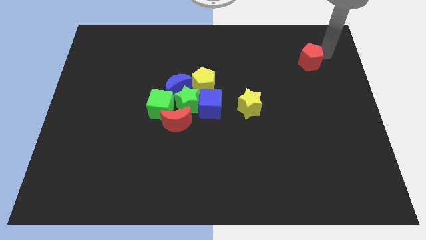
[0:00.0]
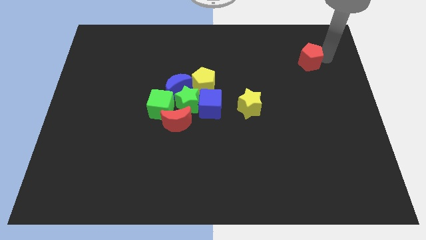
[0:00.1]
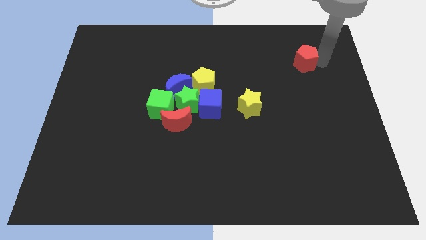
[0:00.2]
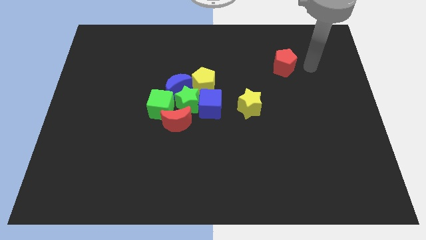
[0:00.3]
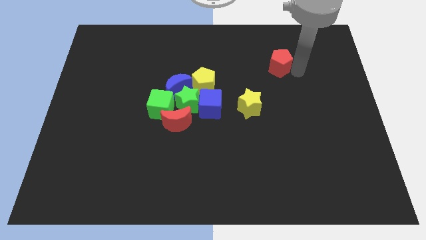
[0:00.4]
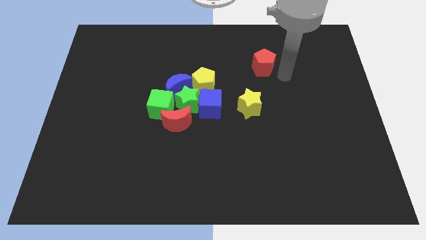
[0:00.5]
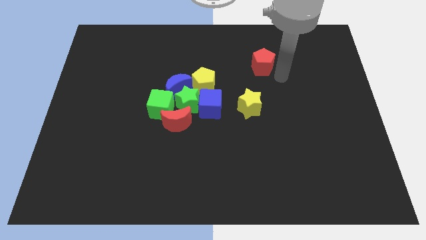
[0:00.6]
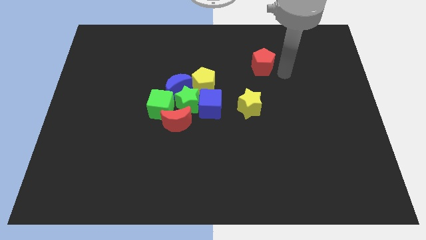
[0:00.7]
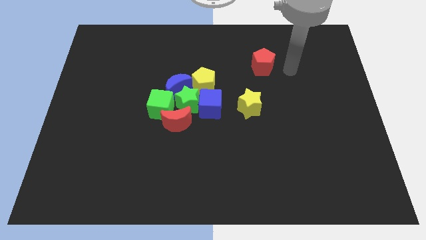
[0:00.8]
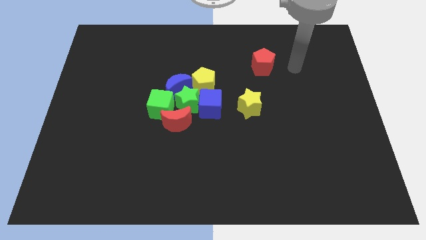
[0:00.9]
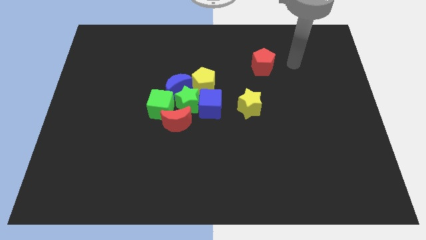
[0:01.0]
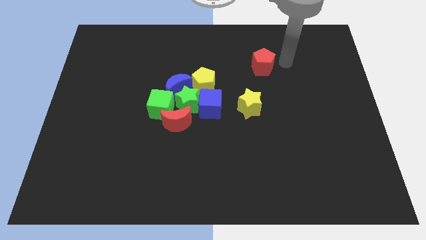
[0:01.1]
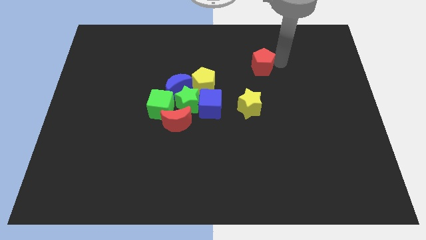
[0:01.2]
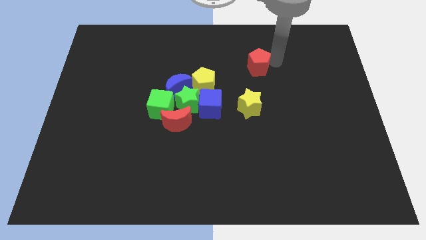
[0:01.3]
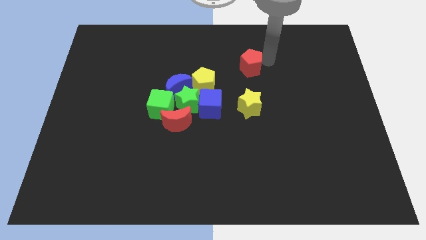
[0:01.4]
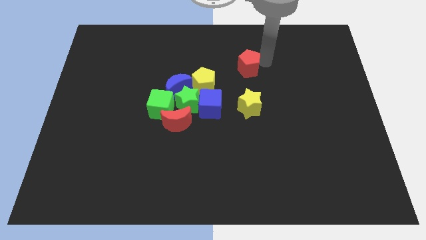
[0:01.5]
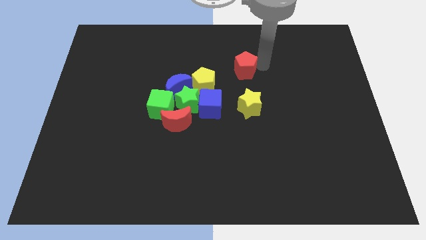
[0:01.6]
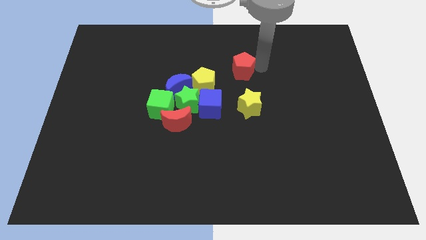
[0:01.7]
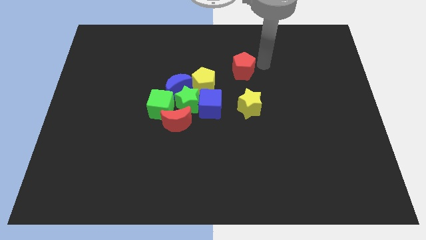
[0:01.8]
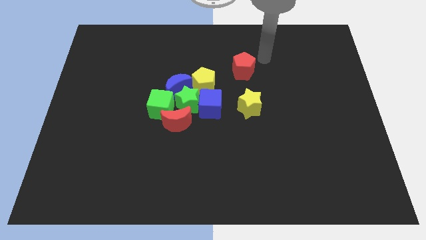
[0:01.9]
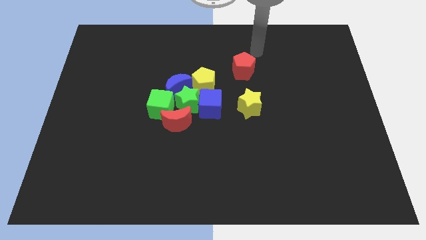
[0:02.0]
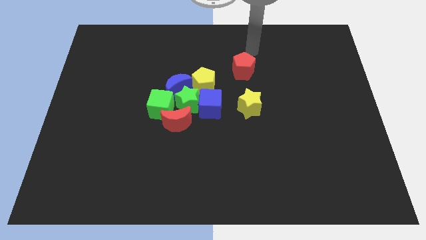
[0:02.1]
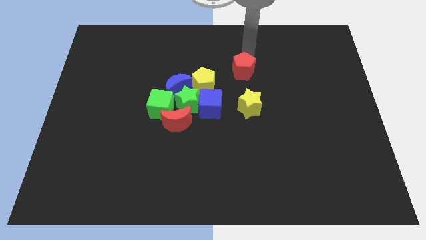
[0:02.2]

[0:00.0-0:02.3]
push the red pentagon above the yellow star

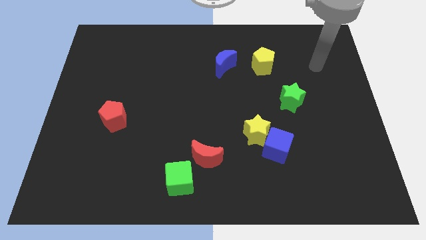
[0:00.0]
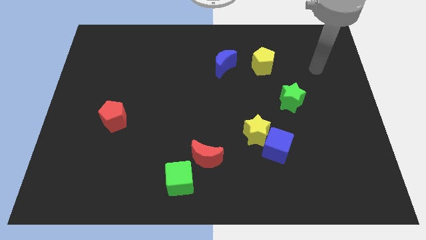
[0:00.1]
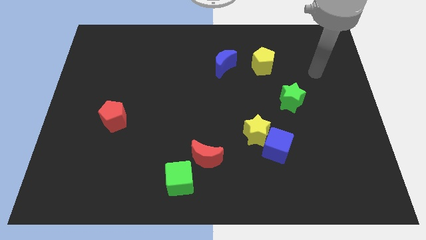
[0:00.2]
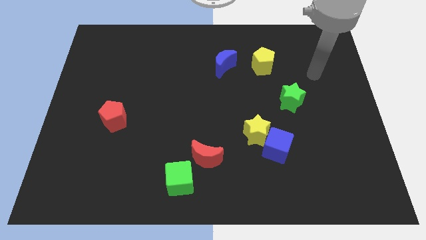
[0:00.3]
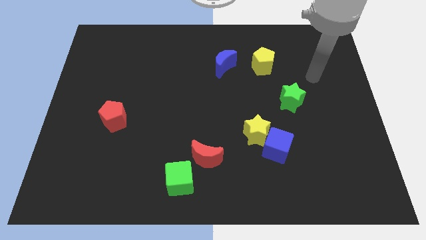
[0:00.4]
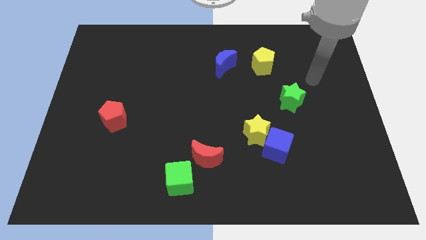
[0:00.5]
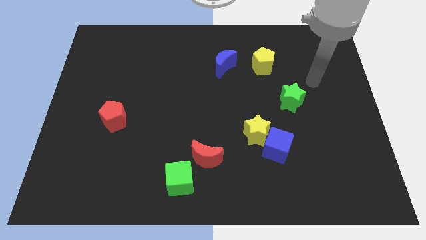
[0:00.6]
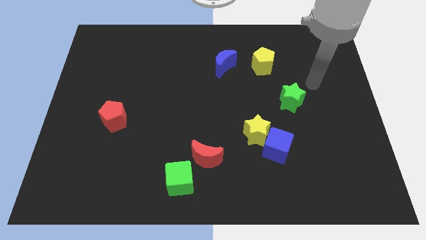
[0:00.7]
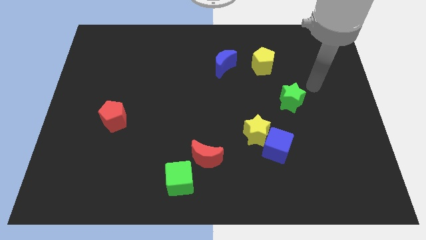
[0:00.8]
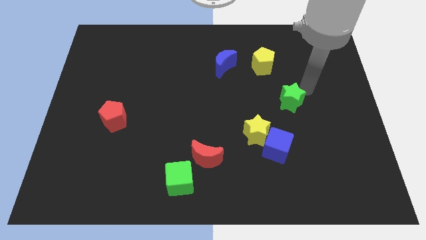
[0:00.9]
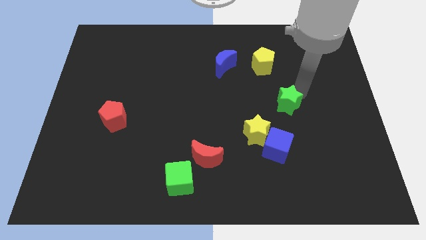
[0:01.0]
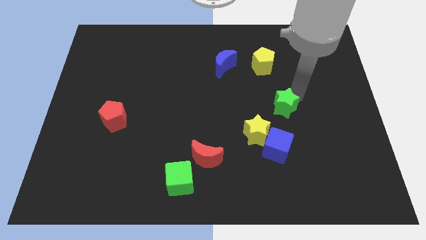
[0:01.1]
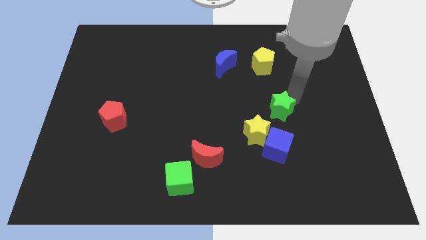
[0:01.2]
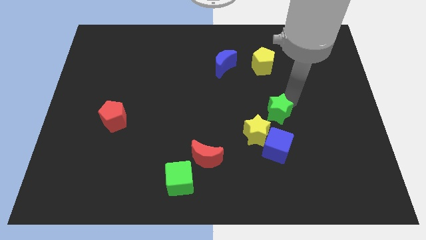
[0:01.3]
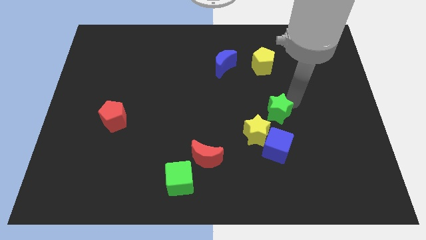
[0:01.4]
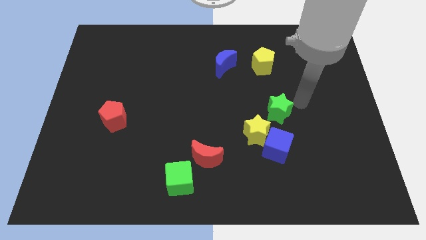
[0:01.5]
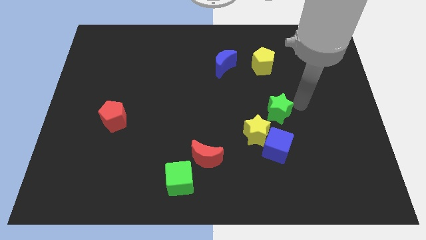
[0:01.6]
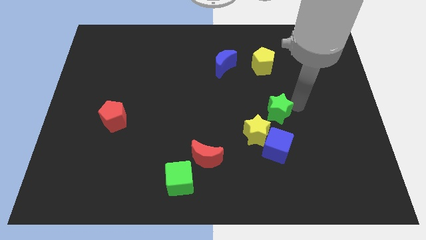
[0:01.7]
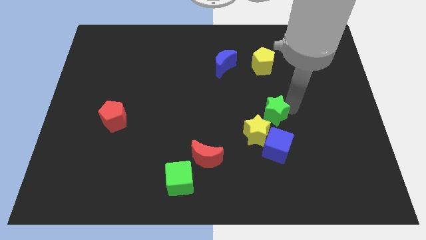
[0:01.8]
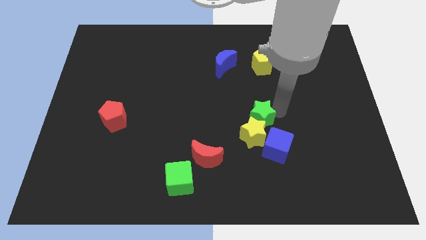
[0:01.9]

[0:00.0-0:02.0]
place the green star on the top right of the yellow star

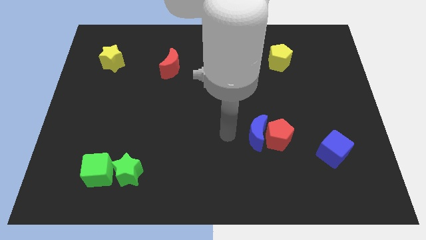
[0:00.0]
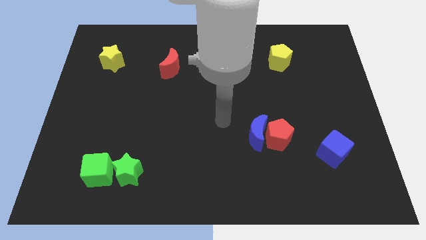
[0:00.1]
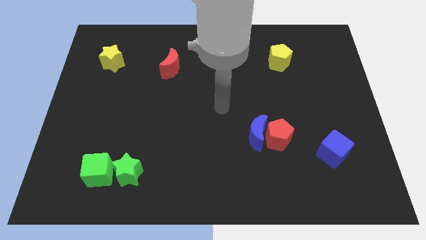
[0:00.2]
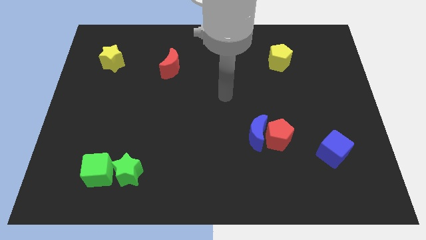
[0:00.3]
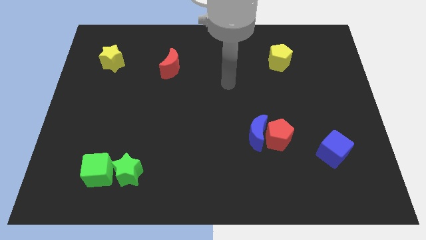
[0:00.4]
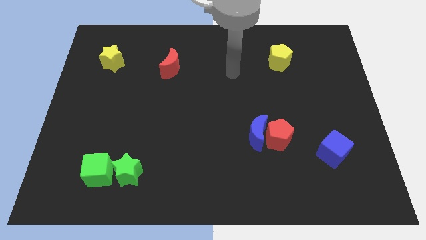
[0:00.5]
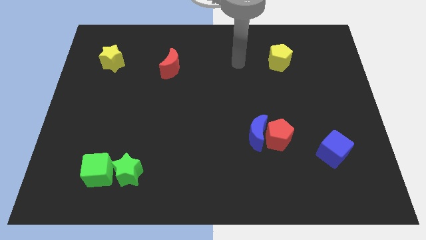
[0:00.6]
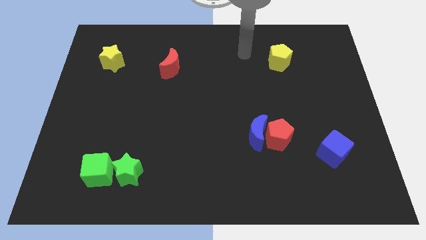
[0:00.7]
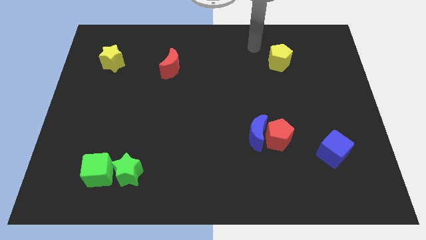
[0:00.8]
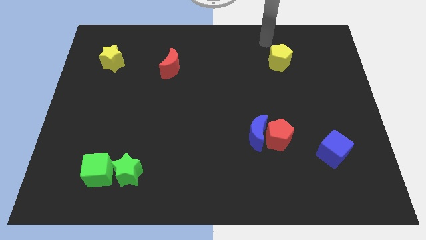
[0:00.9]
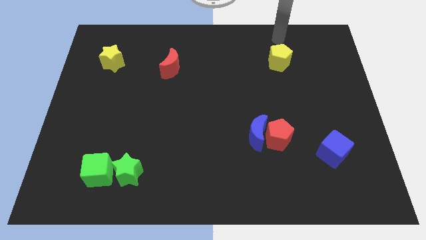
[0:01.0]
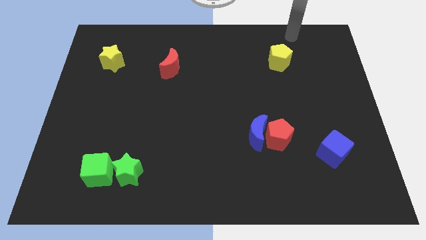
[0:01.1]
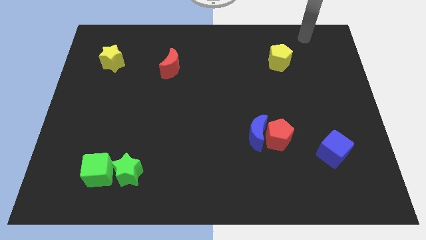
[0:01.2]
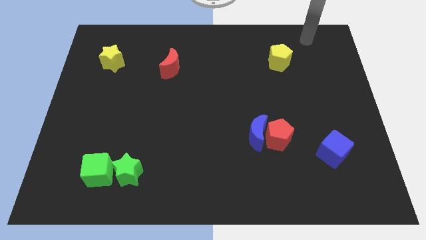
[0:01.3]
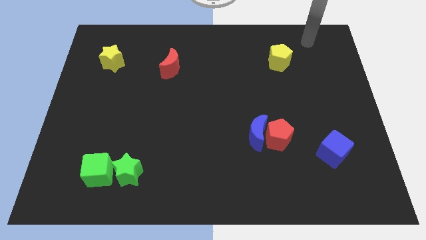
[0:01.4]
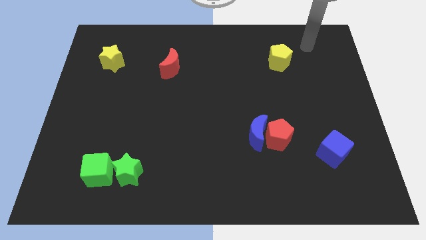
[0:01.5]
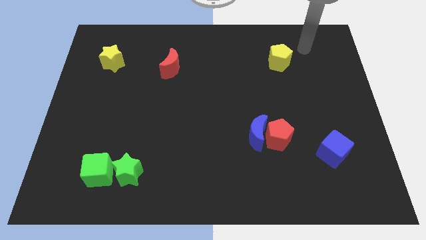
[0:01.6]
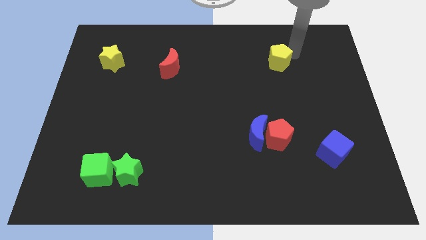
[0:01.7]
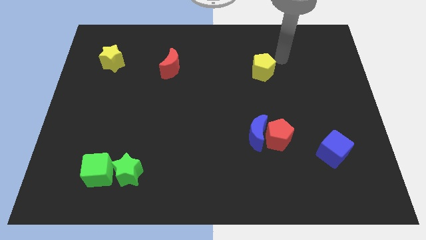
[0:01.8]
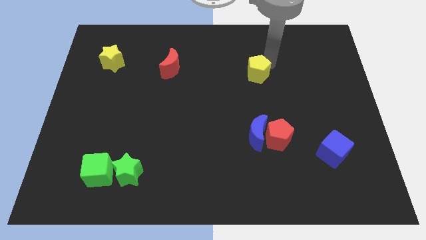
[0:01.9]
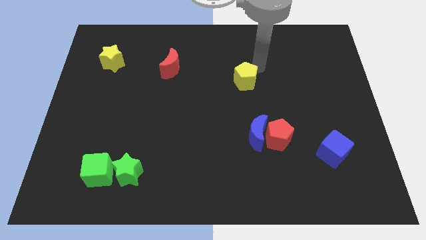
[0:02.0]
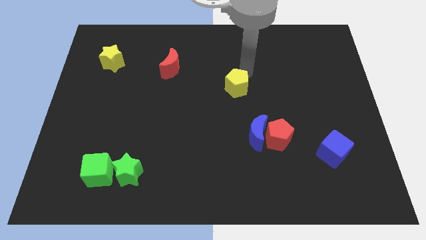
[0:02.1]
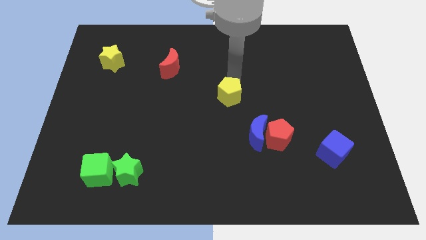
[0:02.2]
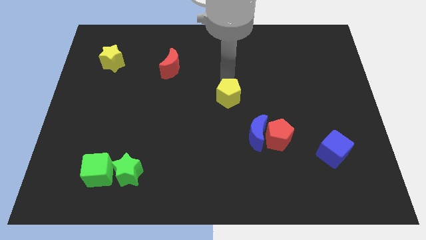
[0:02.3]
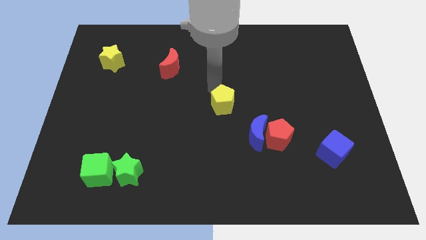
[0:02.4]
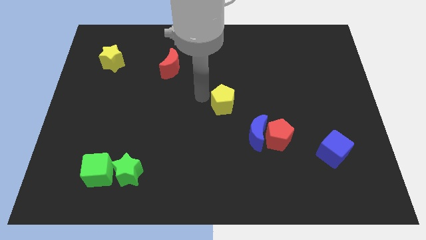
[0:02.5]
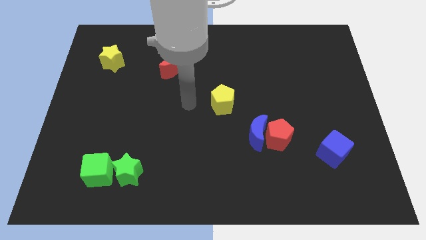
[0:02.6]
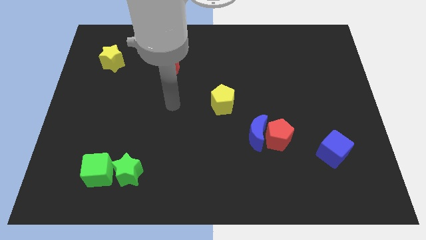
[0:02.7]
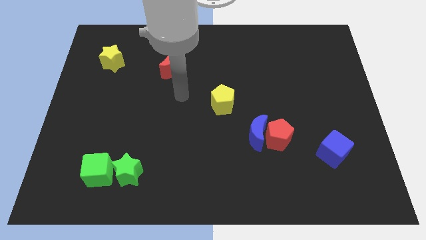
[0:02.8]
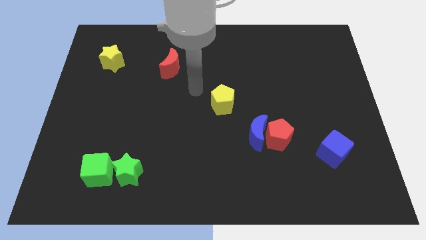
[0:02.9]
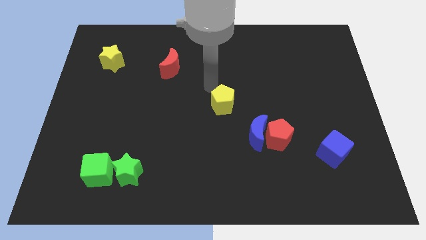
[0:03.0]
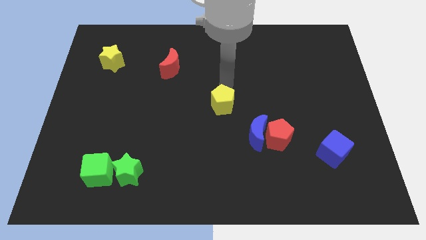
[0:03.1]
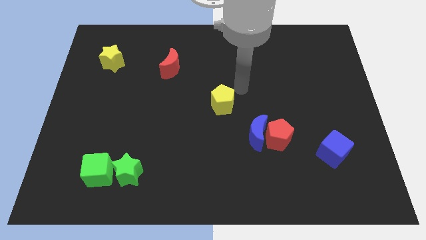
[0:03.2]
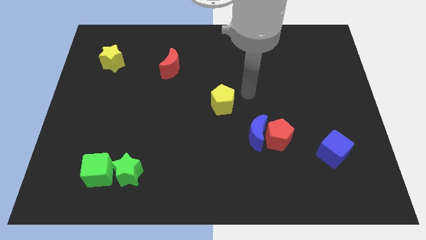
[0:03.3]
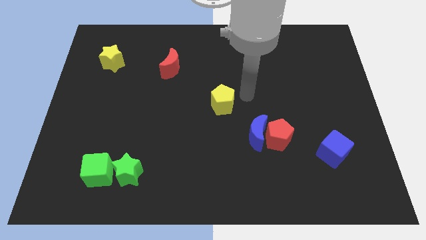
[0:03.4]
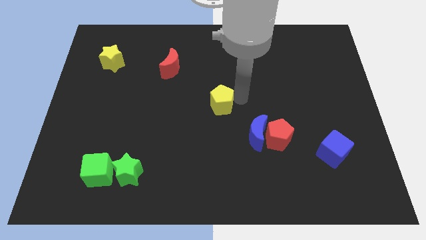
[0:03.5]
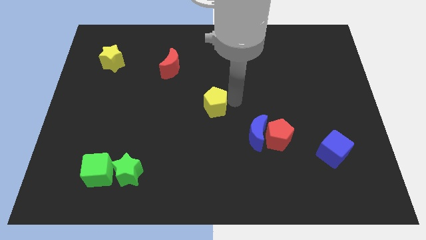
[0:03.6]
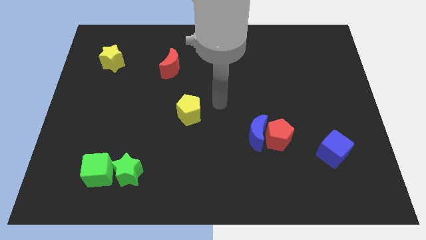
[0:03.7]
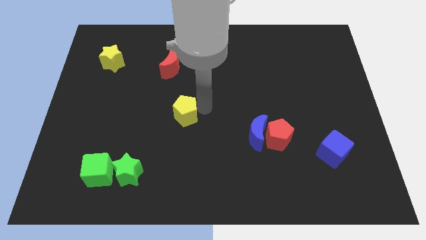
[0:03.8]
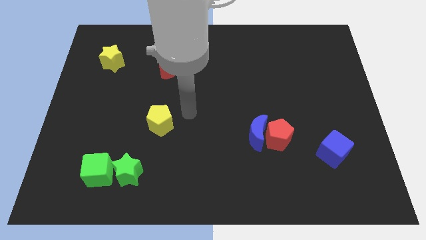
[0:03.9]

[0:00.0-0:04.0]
push the yellow penatgon to the center of the board

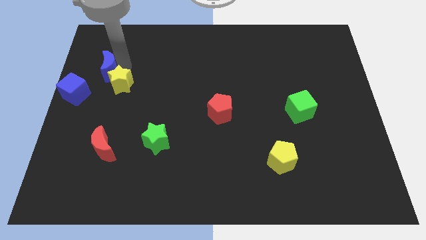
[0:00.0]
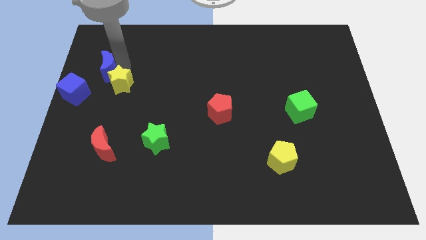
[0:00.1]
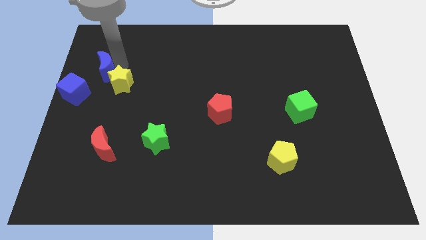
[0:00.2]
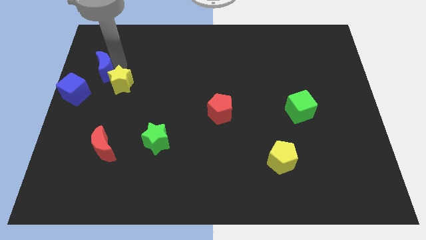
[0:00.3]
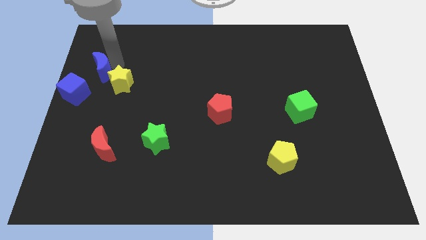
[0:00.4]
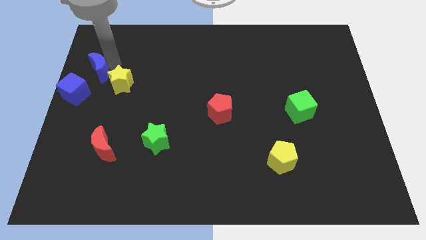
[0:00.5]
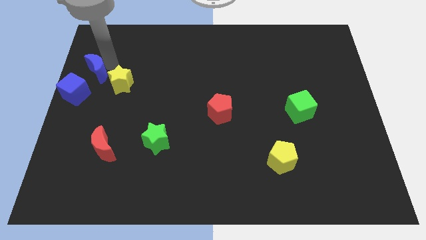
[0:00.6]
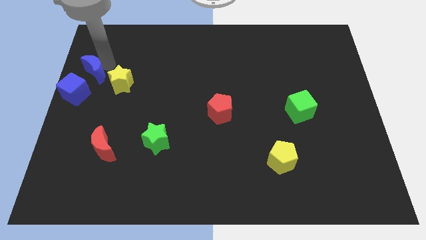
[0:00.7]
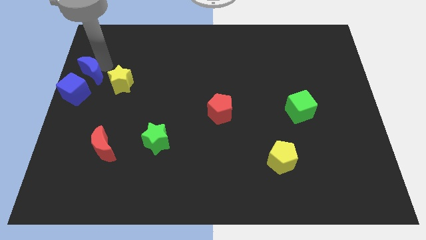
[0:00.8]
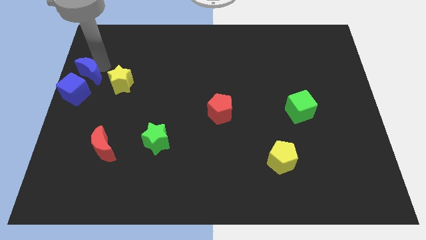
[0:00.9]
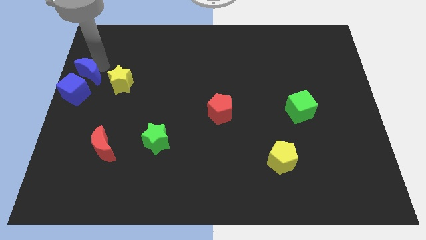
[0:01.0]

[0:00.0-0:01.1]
place the blue crescent above the blue cube
